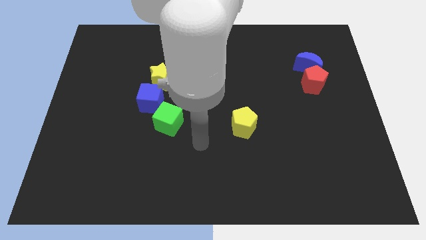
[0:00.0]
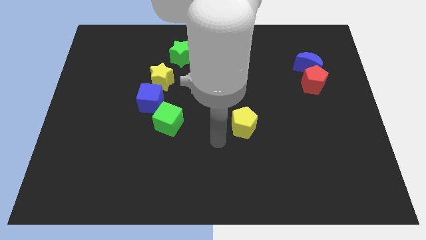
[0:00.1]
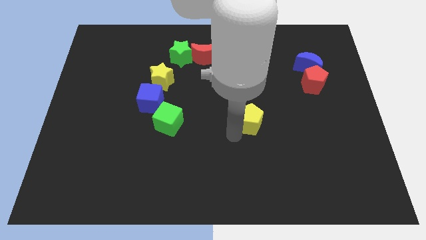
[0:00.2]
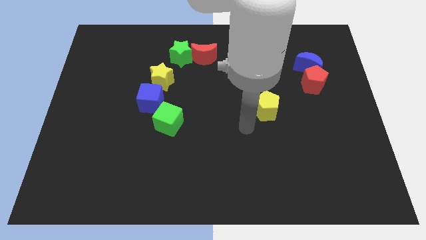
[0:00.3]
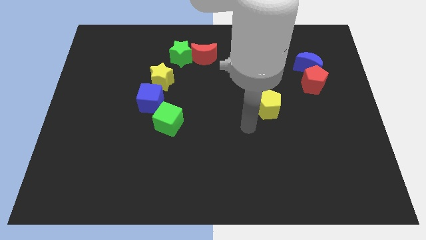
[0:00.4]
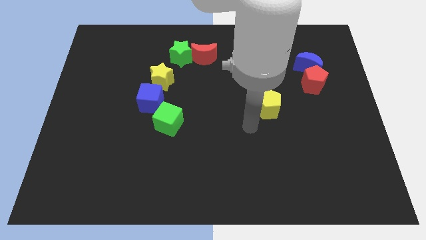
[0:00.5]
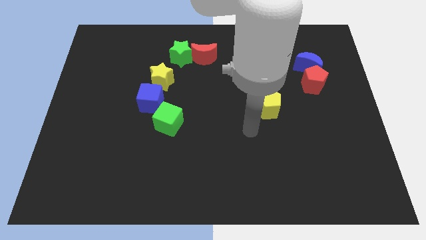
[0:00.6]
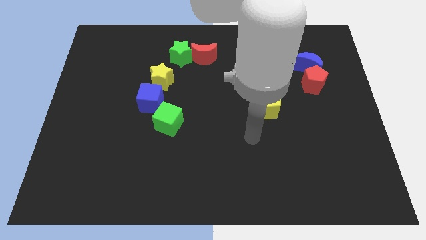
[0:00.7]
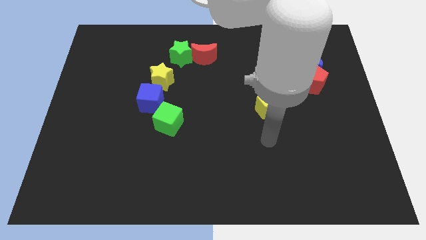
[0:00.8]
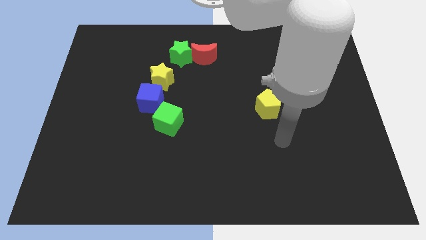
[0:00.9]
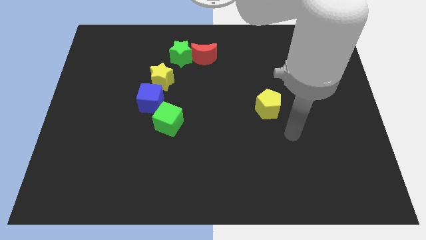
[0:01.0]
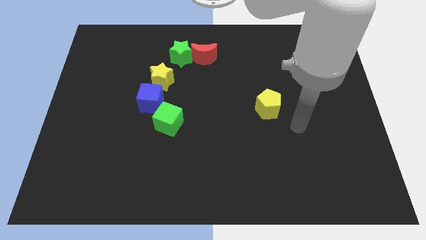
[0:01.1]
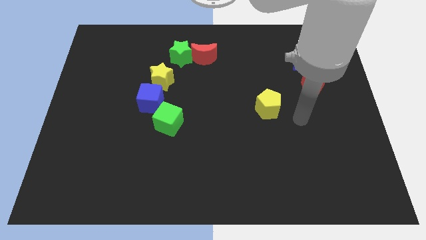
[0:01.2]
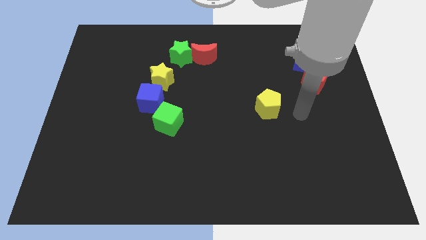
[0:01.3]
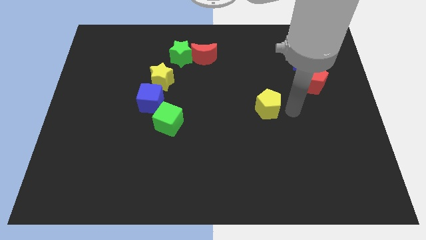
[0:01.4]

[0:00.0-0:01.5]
push the yellow pentagon slightly to the top

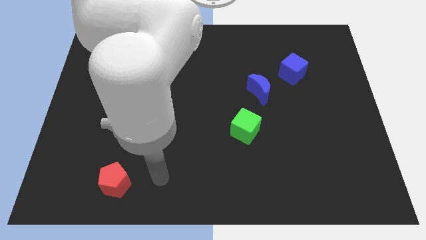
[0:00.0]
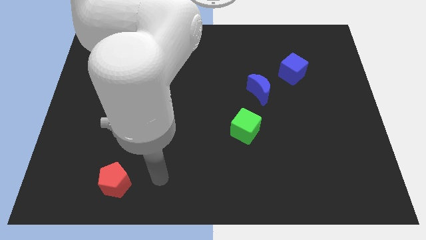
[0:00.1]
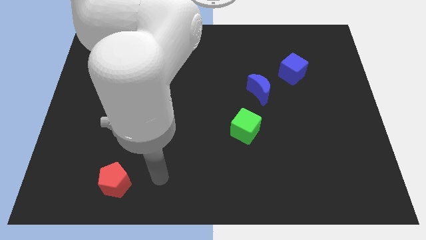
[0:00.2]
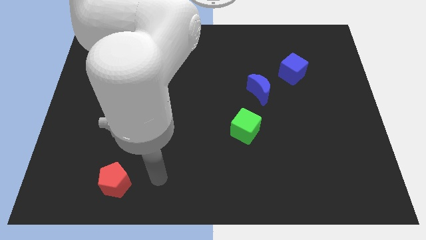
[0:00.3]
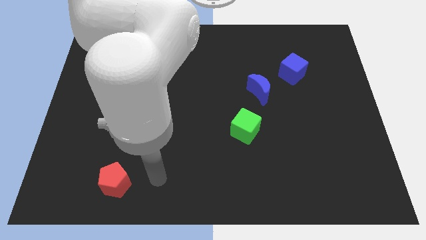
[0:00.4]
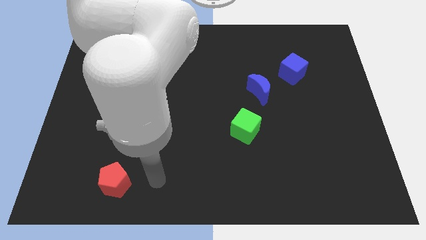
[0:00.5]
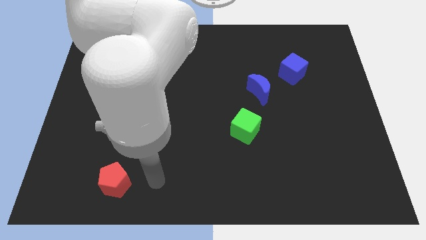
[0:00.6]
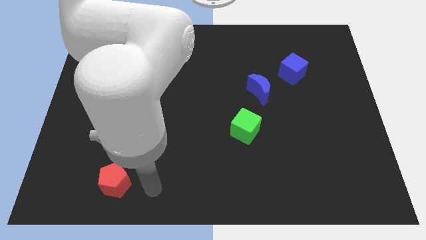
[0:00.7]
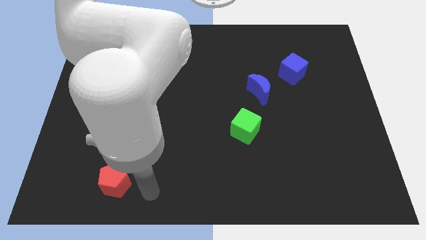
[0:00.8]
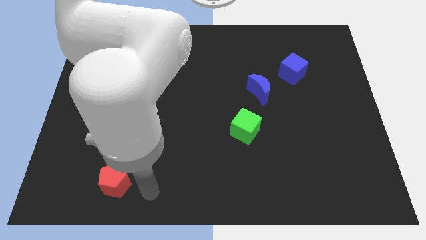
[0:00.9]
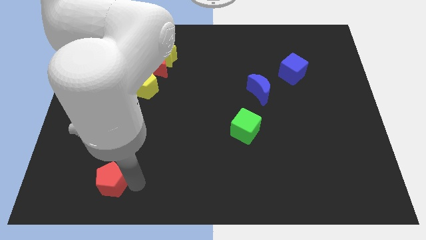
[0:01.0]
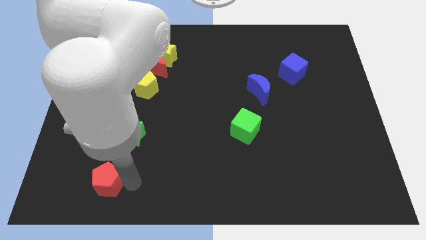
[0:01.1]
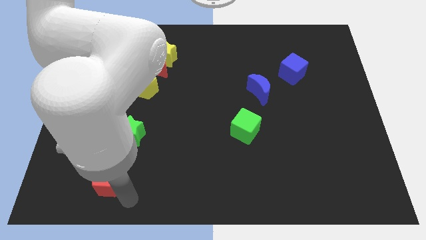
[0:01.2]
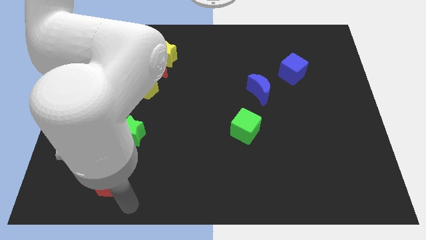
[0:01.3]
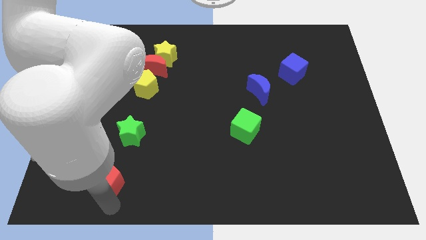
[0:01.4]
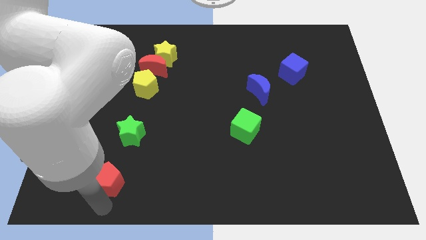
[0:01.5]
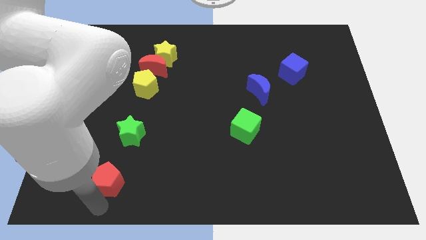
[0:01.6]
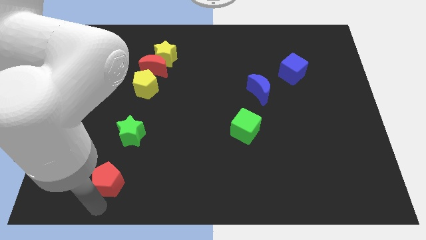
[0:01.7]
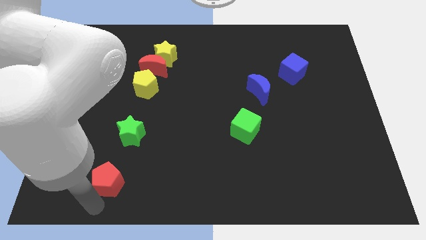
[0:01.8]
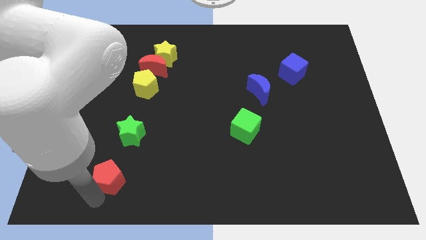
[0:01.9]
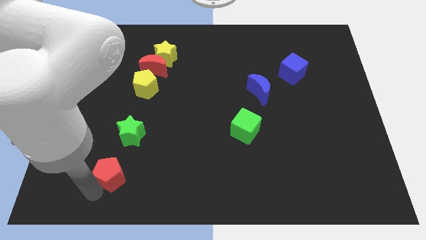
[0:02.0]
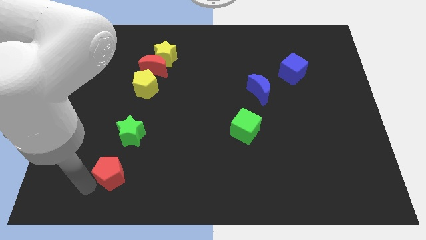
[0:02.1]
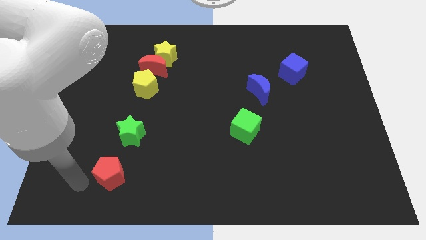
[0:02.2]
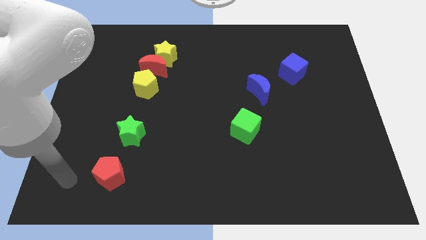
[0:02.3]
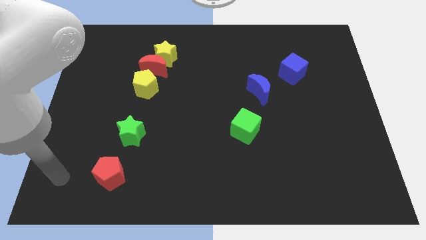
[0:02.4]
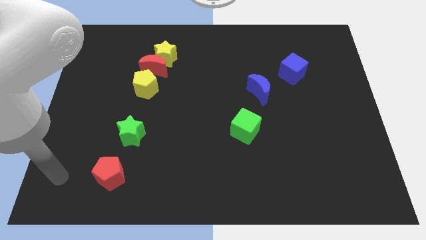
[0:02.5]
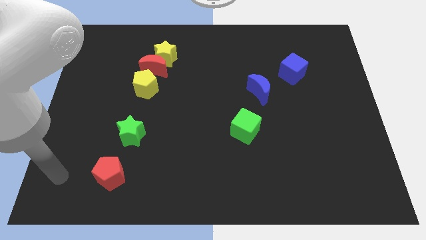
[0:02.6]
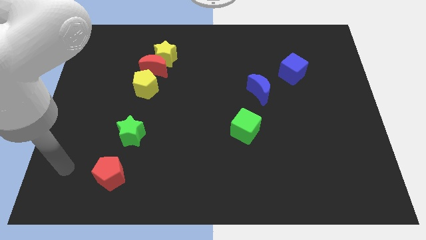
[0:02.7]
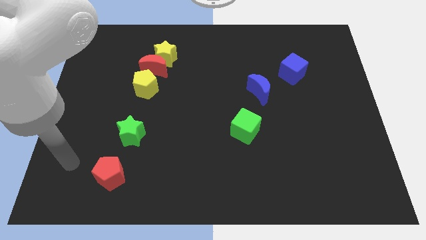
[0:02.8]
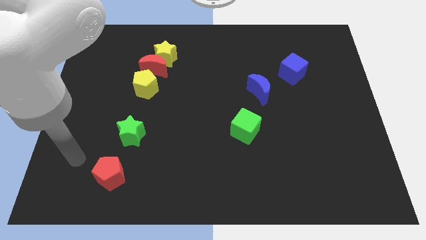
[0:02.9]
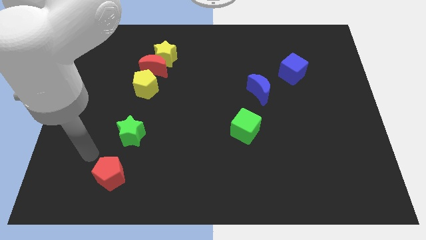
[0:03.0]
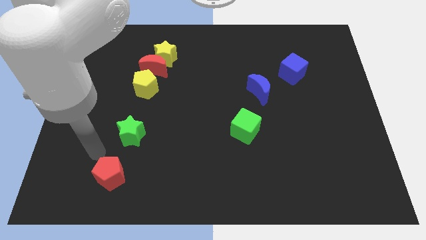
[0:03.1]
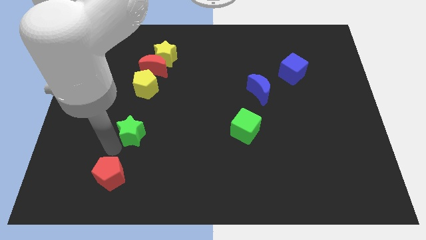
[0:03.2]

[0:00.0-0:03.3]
slightly move the red pentagon below the green star

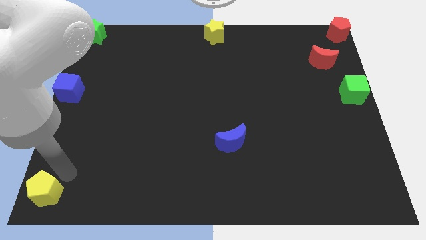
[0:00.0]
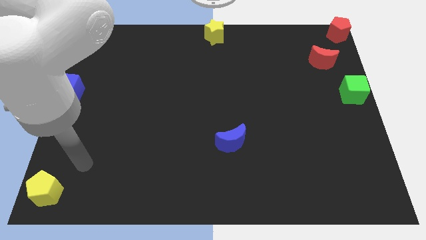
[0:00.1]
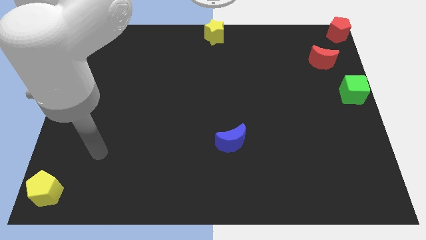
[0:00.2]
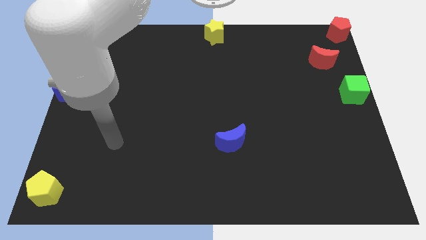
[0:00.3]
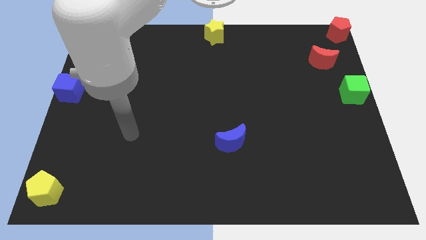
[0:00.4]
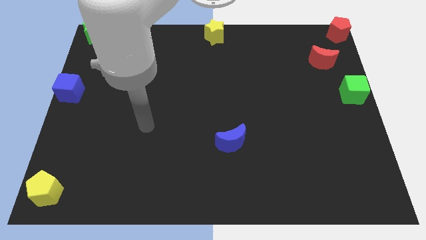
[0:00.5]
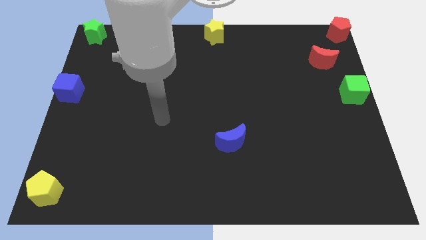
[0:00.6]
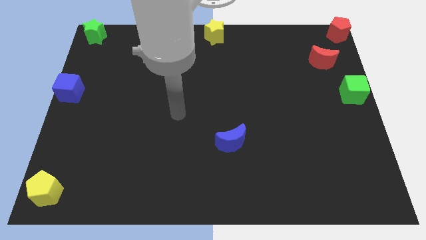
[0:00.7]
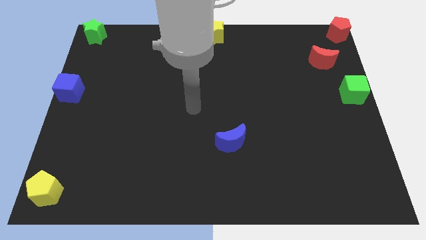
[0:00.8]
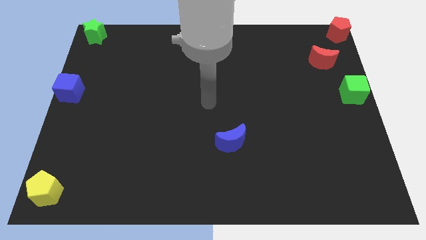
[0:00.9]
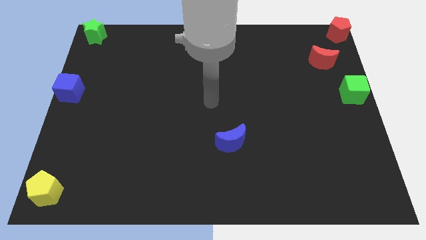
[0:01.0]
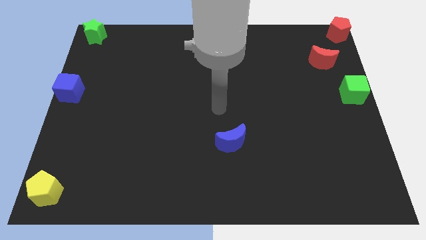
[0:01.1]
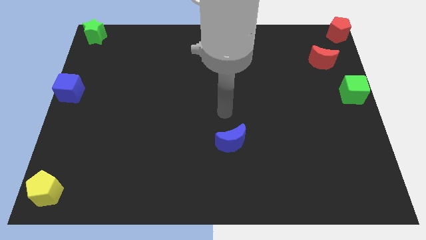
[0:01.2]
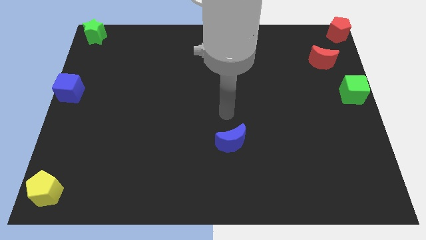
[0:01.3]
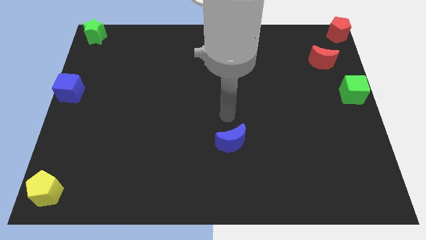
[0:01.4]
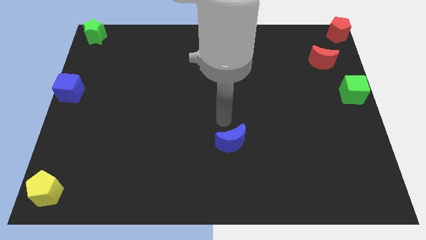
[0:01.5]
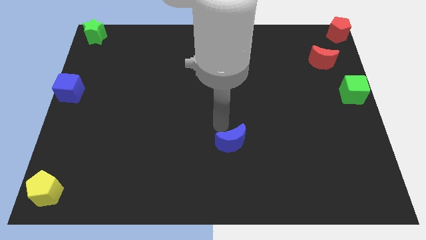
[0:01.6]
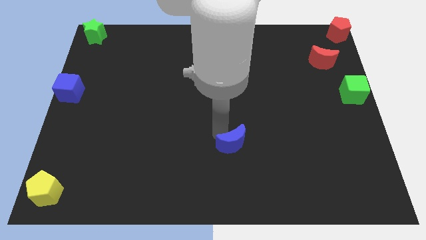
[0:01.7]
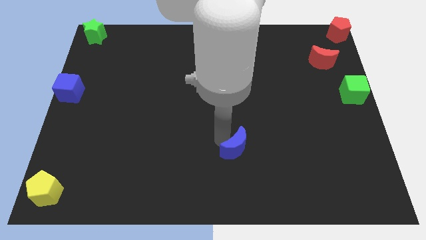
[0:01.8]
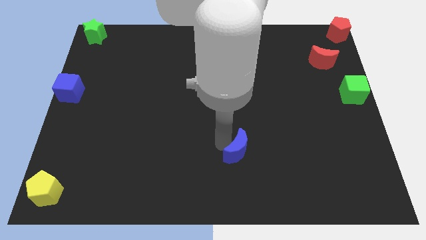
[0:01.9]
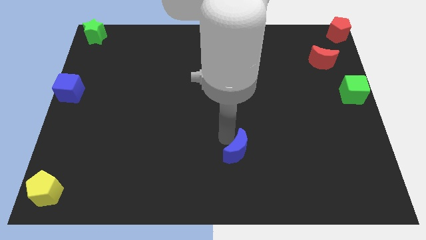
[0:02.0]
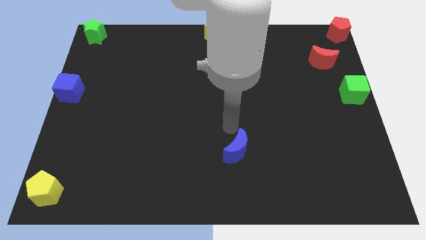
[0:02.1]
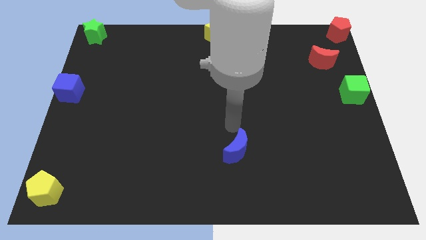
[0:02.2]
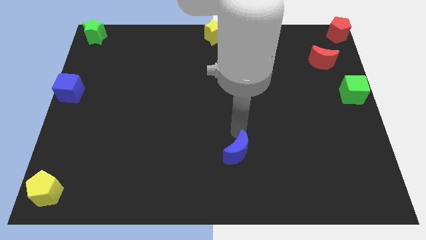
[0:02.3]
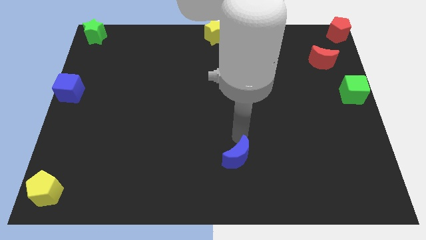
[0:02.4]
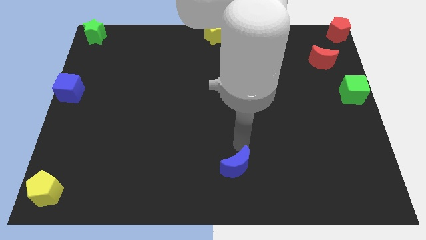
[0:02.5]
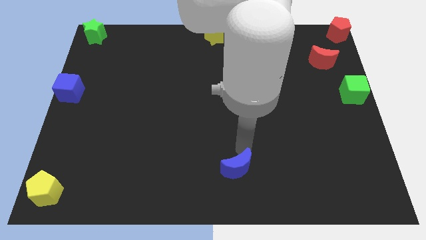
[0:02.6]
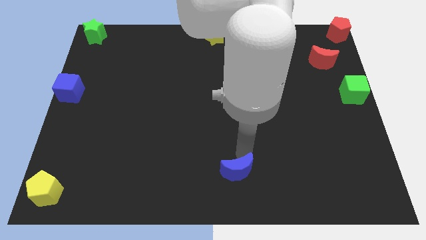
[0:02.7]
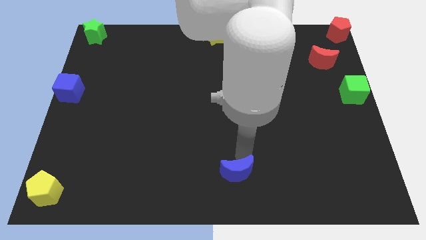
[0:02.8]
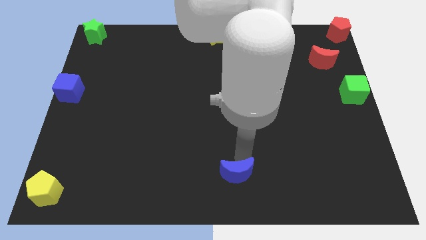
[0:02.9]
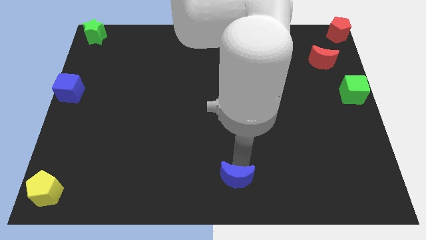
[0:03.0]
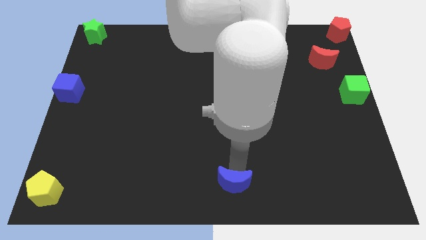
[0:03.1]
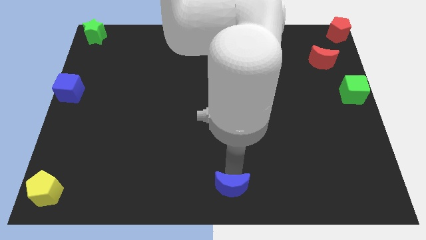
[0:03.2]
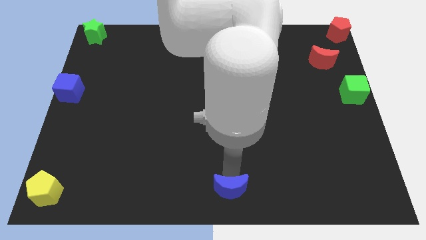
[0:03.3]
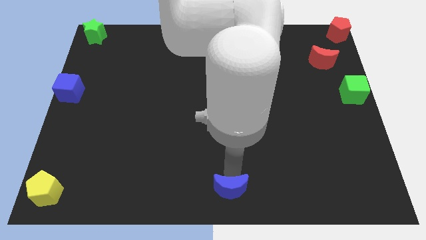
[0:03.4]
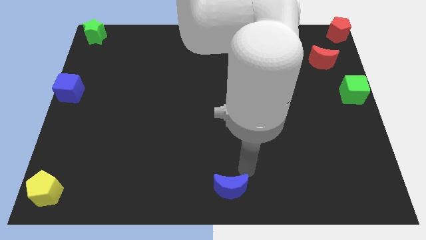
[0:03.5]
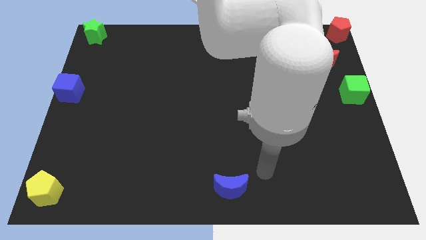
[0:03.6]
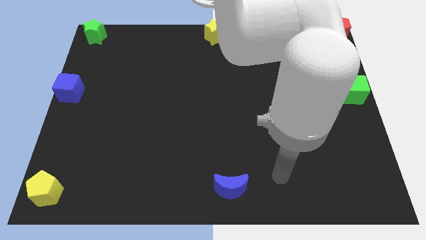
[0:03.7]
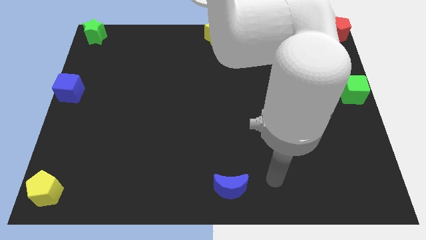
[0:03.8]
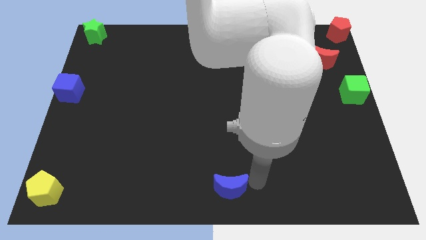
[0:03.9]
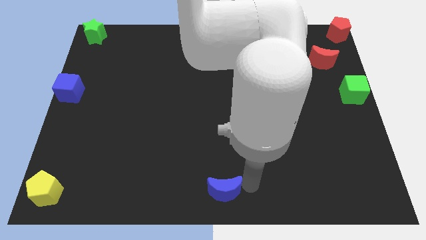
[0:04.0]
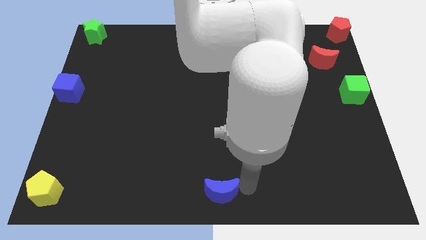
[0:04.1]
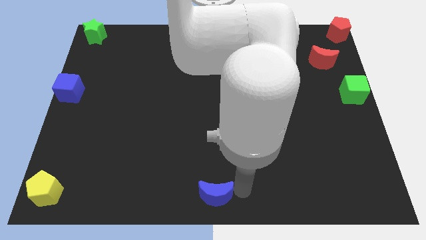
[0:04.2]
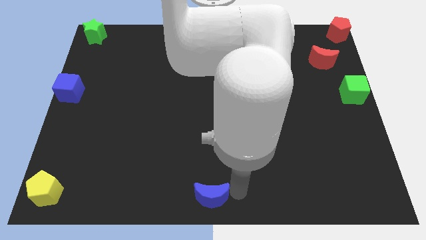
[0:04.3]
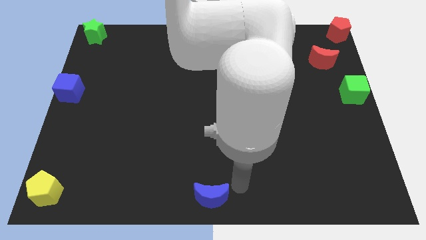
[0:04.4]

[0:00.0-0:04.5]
slide the blue moon to the bottom center of the board
